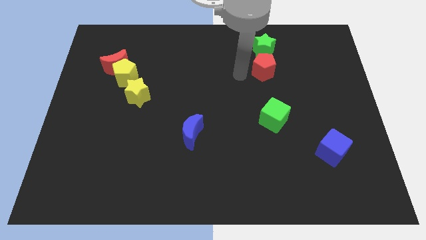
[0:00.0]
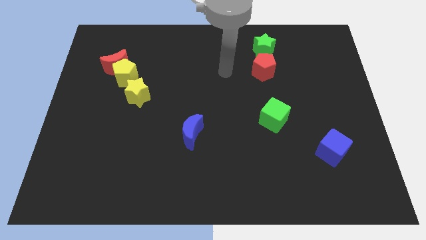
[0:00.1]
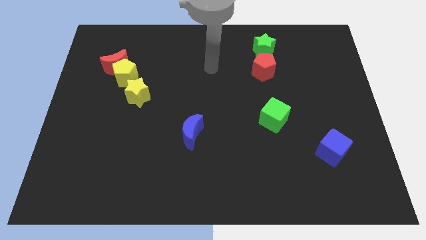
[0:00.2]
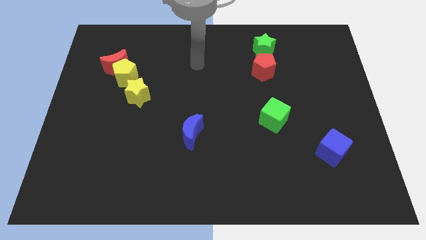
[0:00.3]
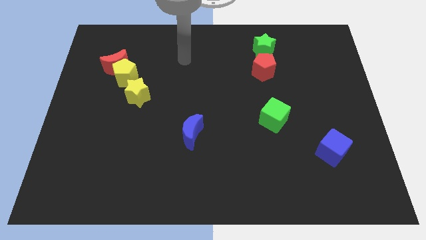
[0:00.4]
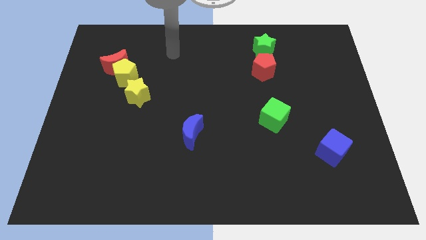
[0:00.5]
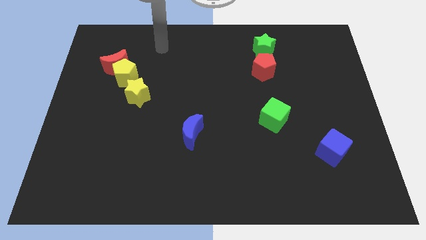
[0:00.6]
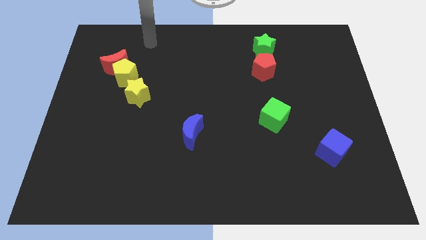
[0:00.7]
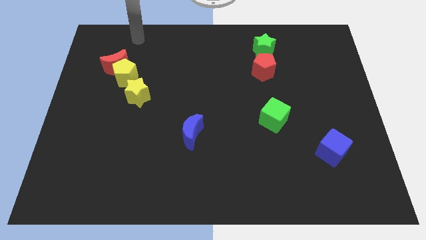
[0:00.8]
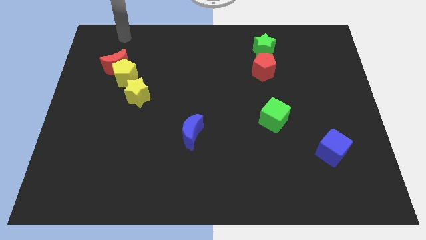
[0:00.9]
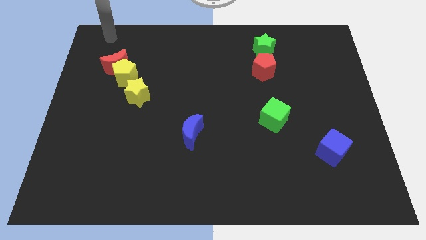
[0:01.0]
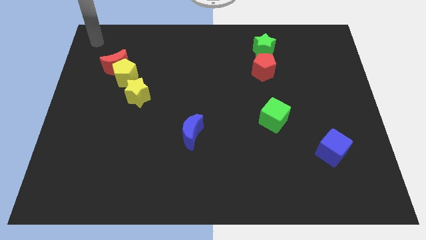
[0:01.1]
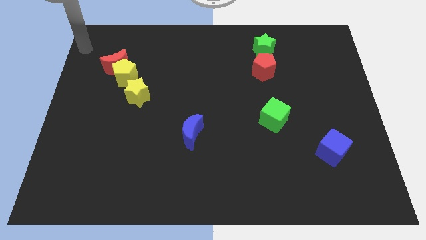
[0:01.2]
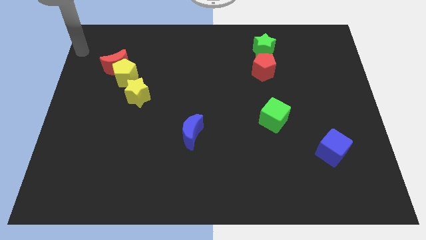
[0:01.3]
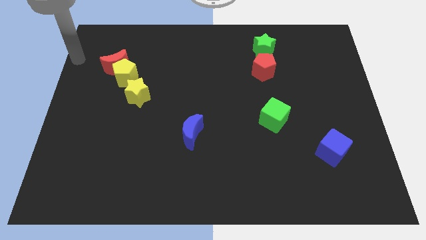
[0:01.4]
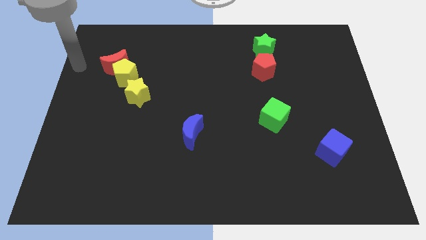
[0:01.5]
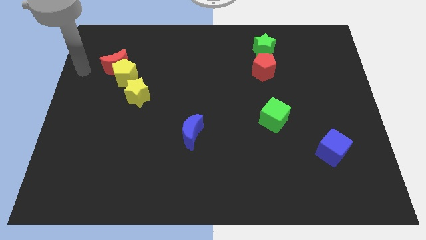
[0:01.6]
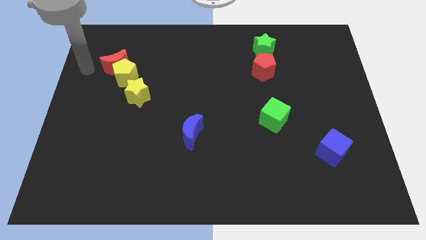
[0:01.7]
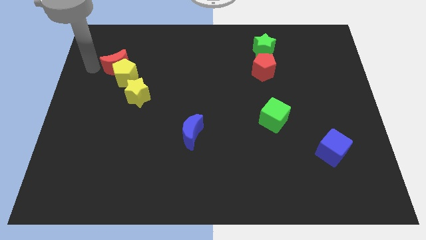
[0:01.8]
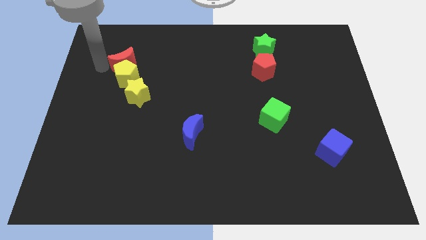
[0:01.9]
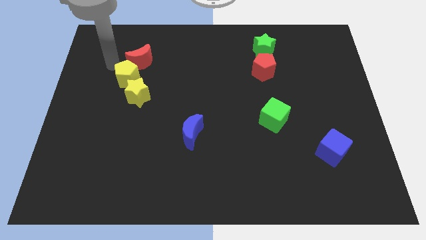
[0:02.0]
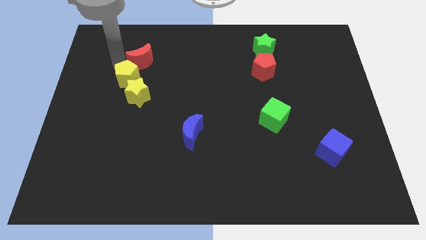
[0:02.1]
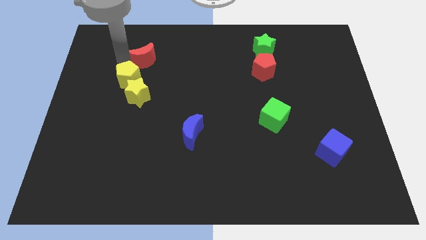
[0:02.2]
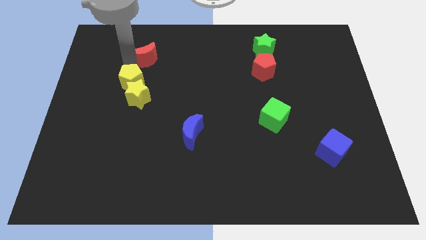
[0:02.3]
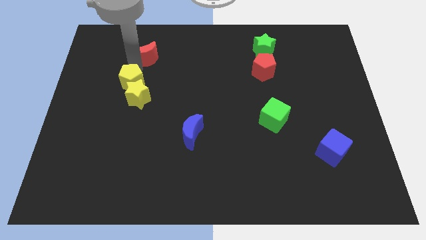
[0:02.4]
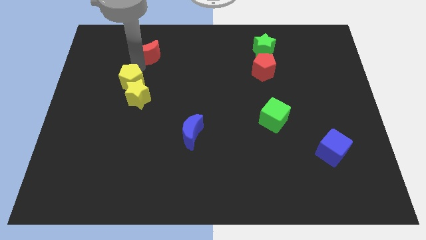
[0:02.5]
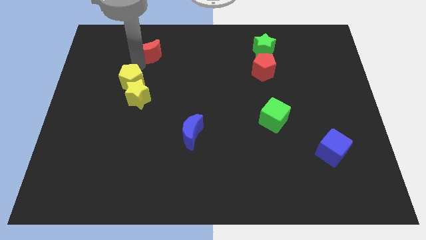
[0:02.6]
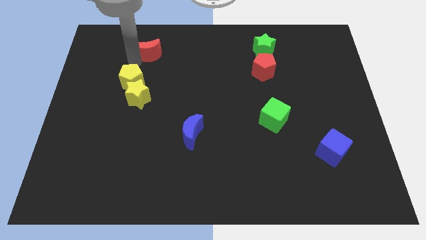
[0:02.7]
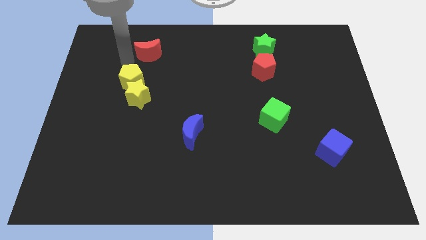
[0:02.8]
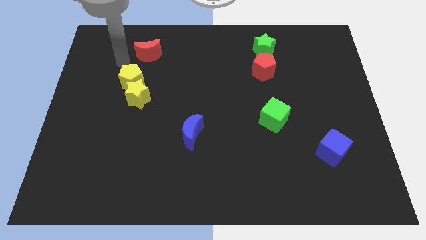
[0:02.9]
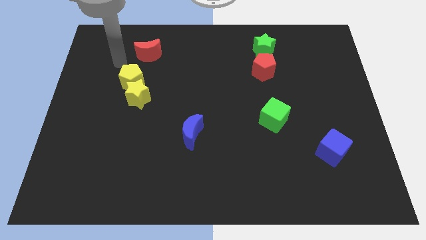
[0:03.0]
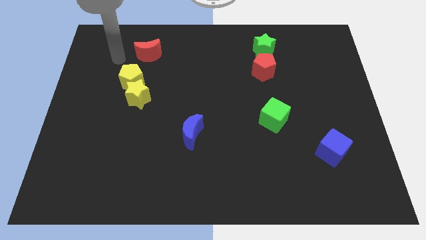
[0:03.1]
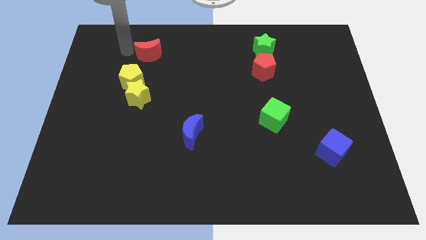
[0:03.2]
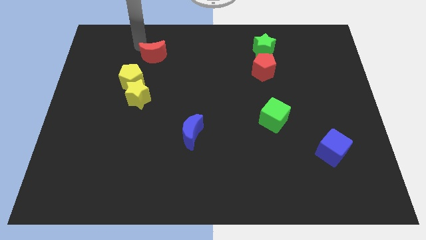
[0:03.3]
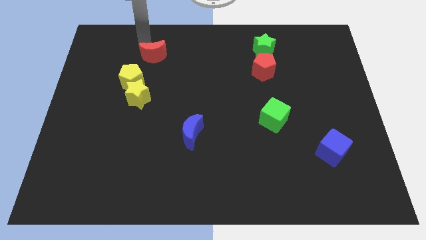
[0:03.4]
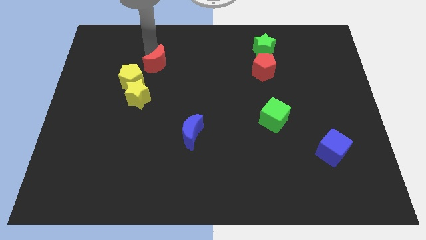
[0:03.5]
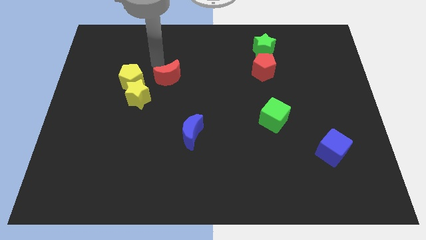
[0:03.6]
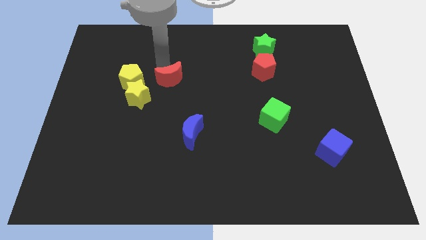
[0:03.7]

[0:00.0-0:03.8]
slide the red moon to the right of yellow pentagon

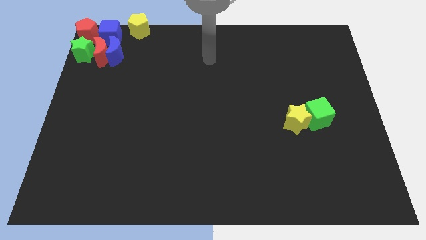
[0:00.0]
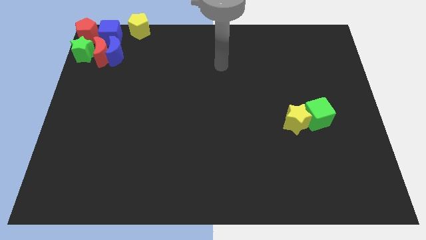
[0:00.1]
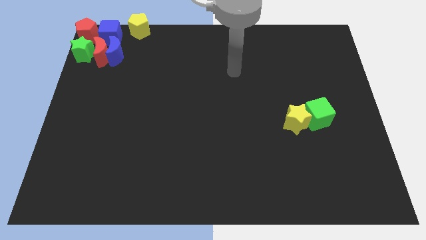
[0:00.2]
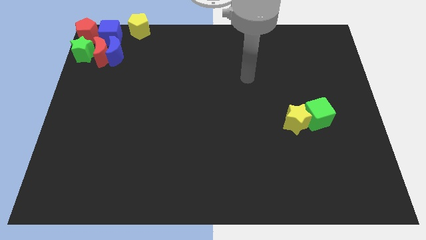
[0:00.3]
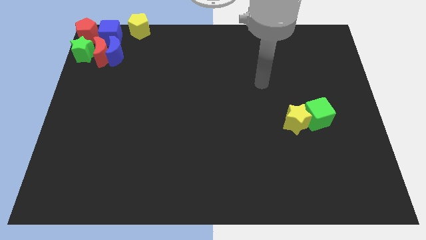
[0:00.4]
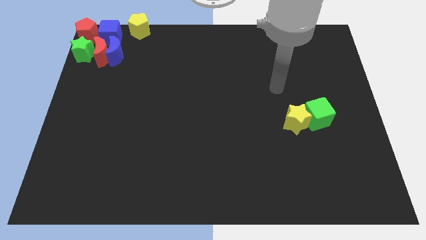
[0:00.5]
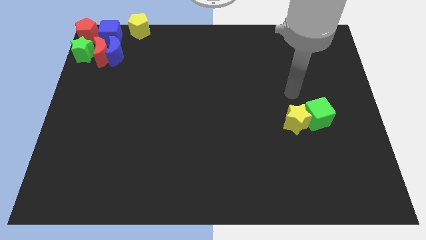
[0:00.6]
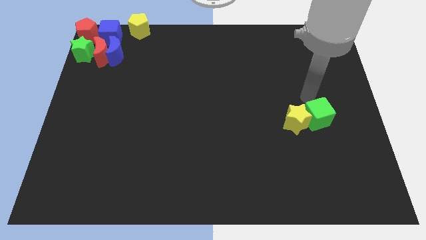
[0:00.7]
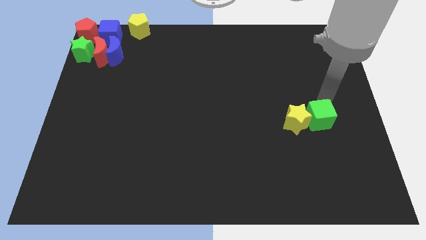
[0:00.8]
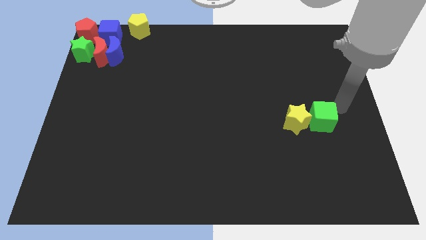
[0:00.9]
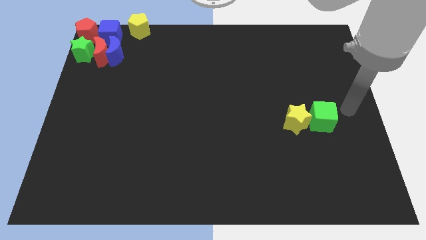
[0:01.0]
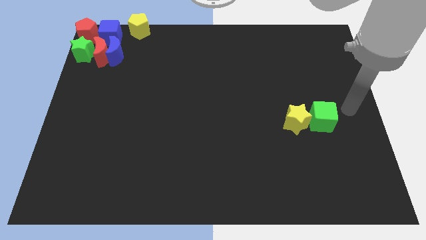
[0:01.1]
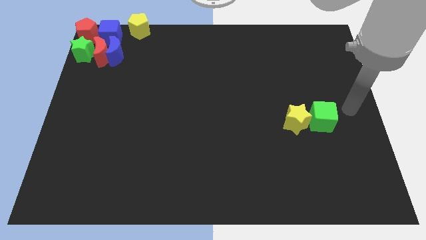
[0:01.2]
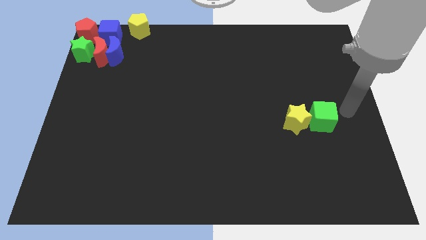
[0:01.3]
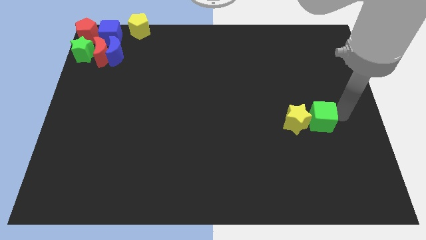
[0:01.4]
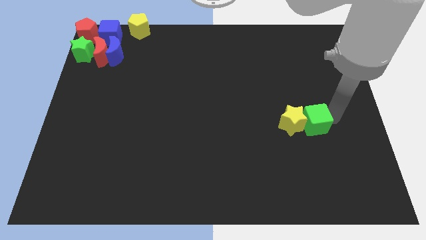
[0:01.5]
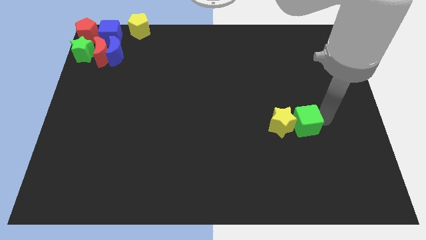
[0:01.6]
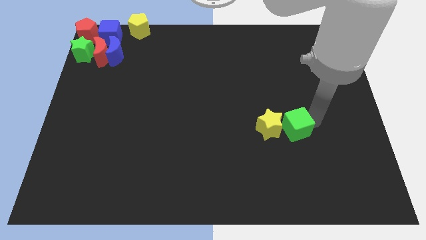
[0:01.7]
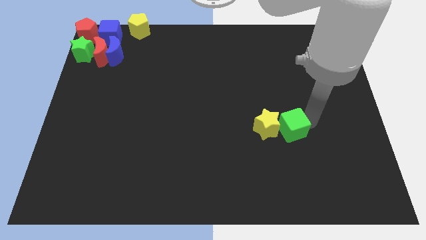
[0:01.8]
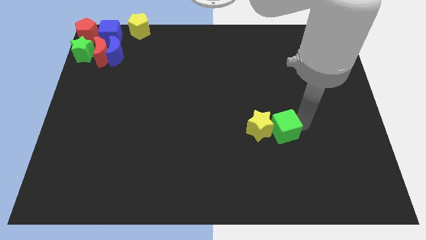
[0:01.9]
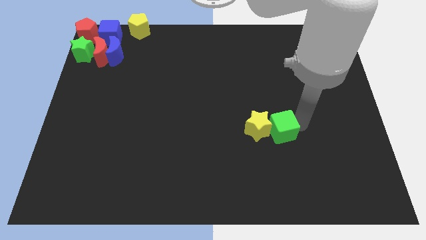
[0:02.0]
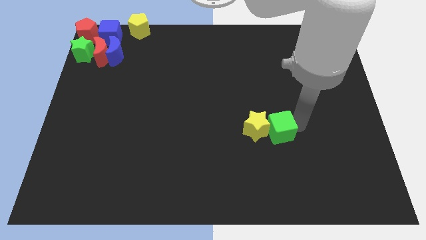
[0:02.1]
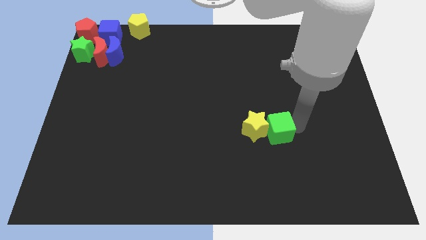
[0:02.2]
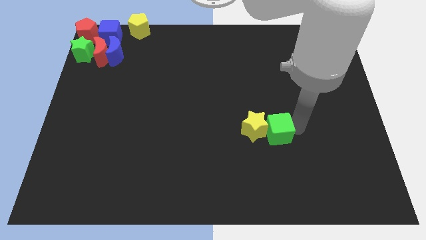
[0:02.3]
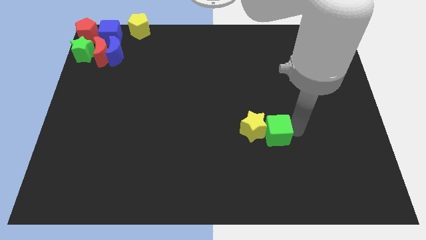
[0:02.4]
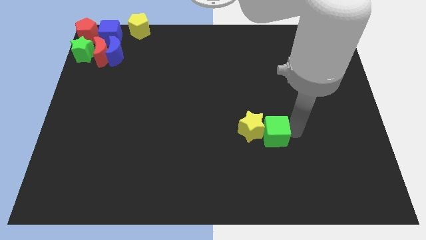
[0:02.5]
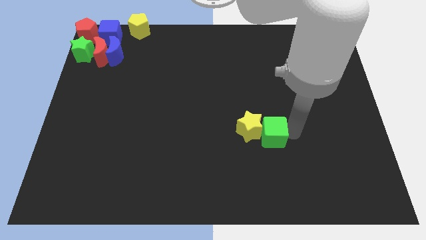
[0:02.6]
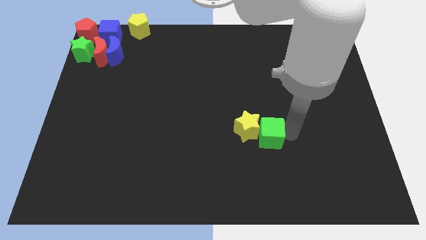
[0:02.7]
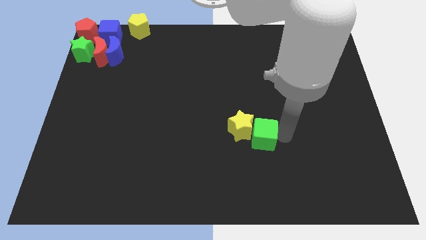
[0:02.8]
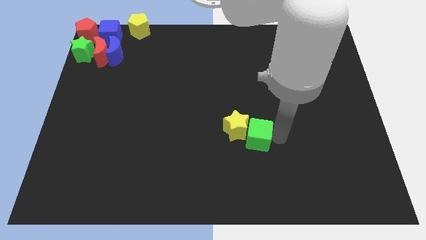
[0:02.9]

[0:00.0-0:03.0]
point your arm right to green cube

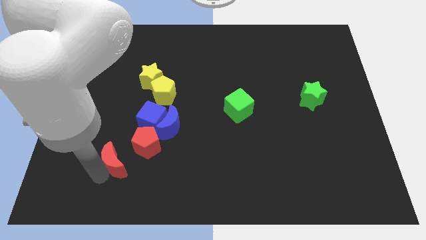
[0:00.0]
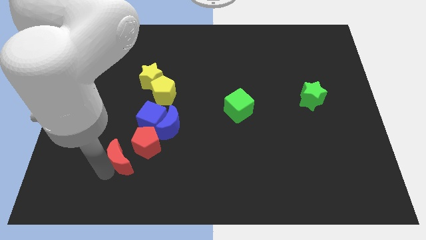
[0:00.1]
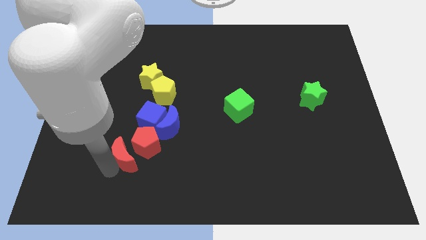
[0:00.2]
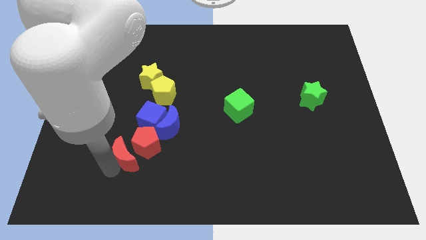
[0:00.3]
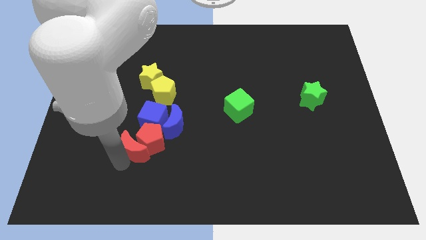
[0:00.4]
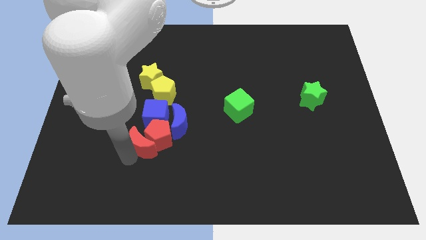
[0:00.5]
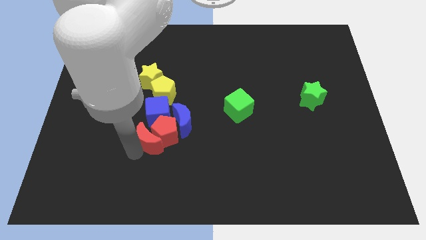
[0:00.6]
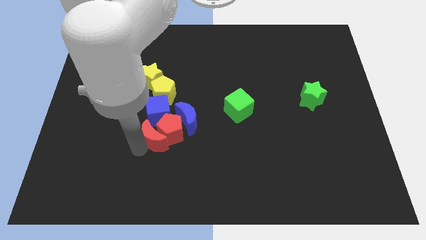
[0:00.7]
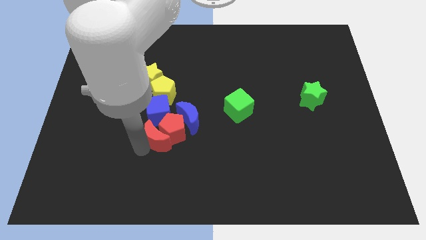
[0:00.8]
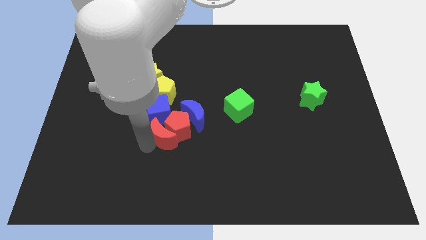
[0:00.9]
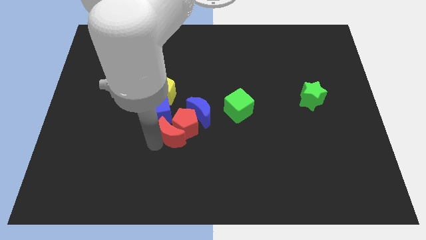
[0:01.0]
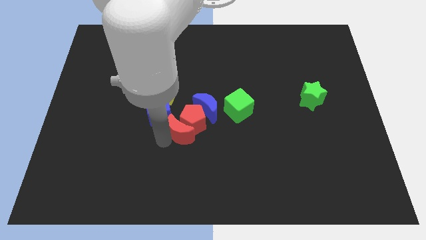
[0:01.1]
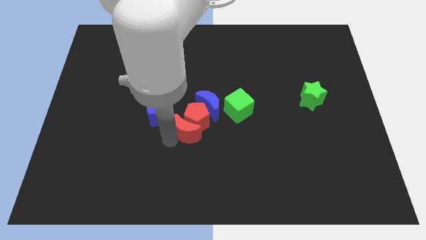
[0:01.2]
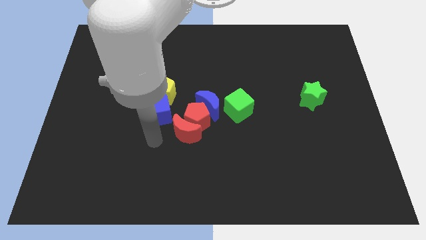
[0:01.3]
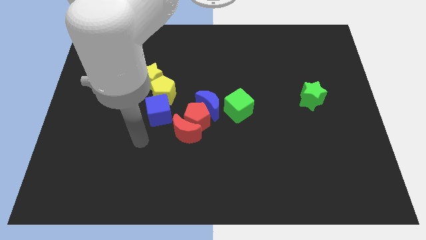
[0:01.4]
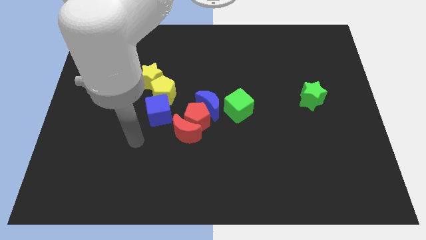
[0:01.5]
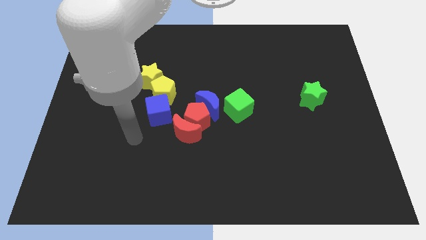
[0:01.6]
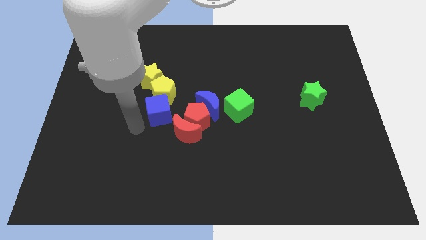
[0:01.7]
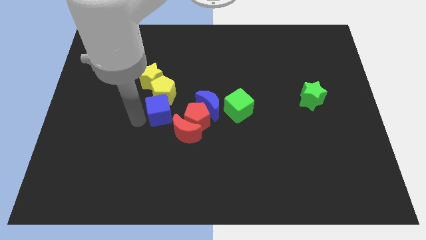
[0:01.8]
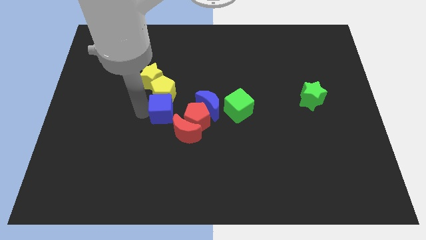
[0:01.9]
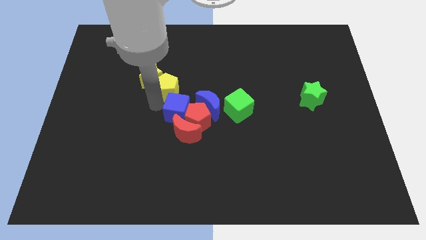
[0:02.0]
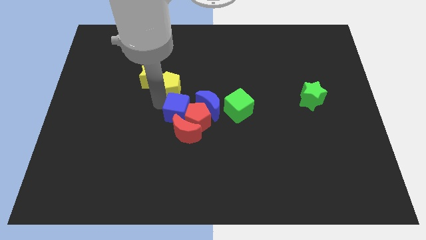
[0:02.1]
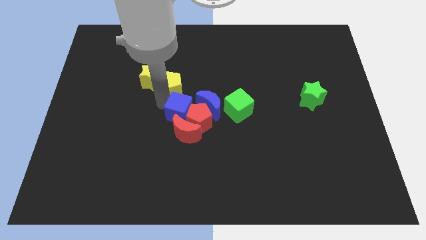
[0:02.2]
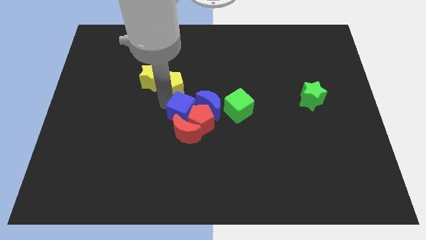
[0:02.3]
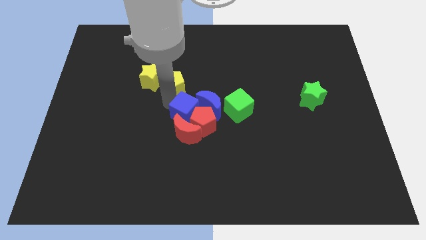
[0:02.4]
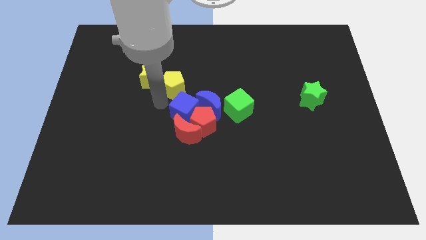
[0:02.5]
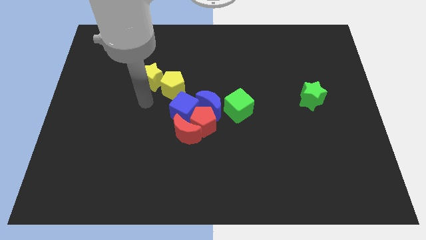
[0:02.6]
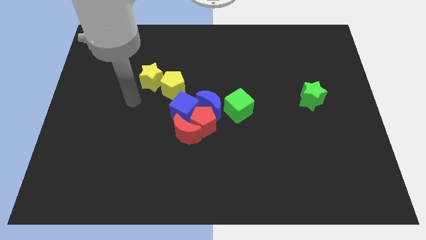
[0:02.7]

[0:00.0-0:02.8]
adjust the red and blue blocks in between the yellow pentagon and the green cube
